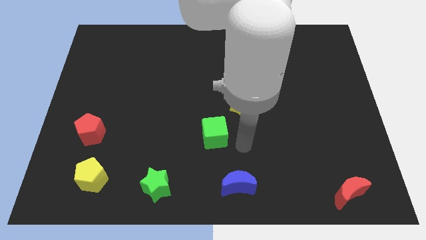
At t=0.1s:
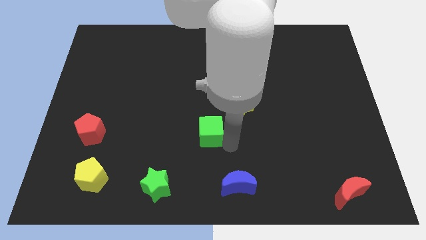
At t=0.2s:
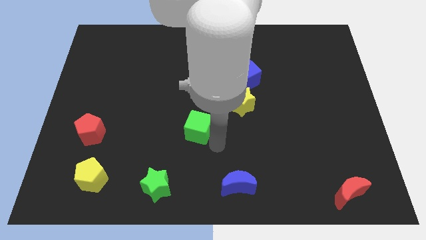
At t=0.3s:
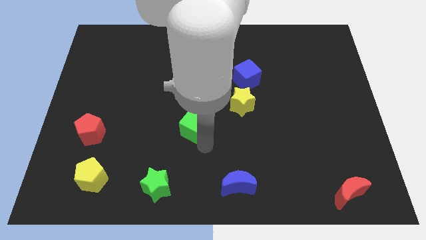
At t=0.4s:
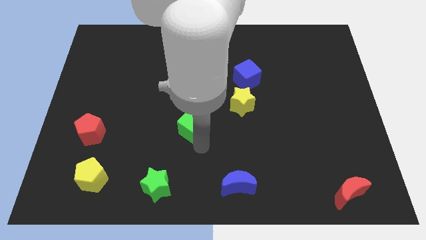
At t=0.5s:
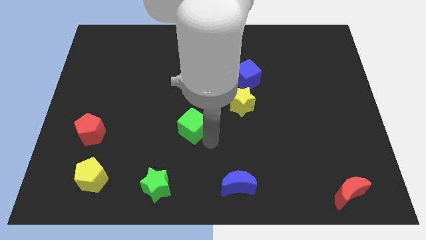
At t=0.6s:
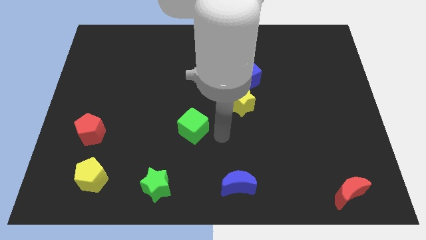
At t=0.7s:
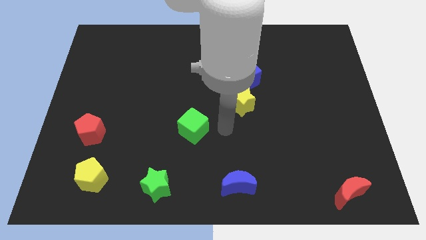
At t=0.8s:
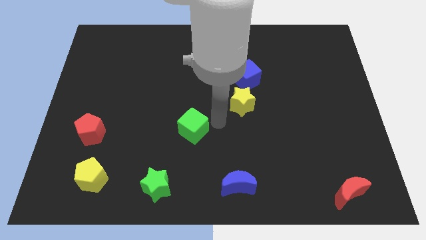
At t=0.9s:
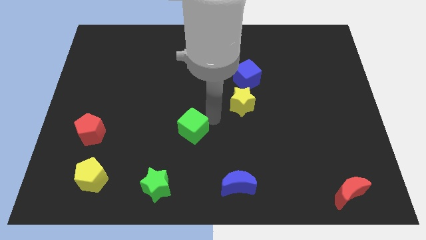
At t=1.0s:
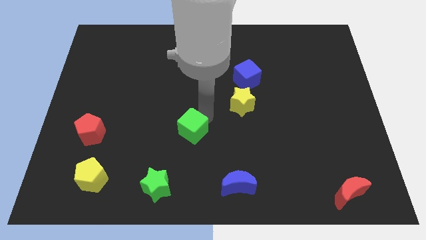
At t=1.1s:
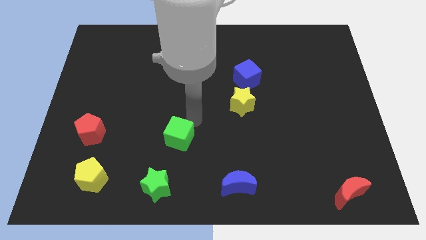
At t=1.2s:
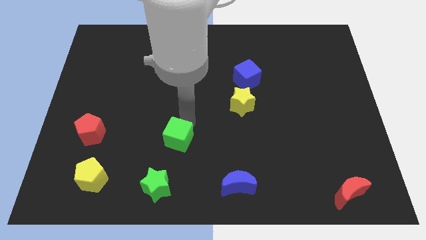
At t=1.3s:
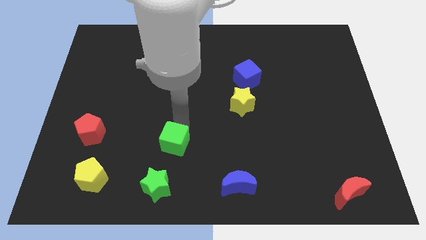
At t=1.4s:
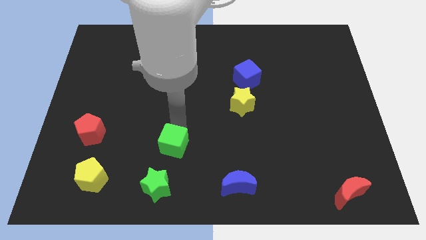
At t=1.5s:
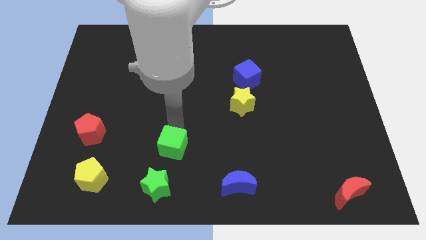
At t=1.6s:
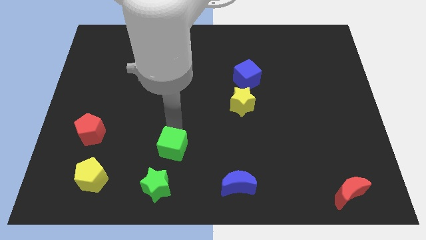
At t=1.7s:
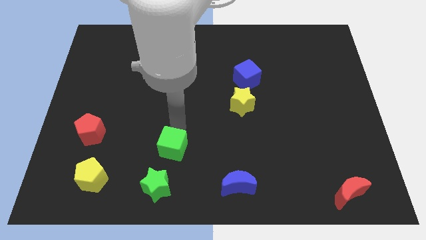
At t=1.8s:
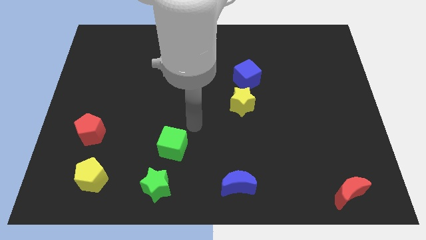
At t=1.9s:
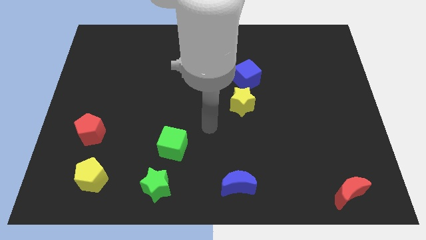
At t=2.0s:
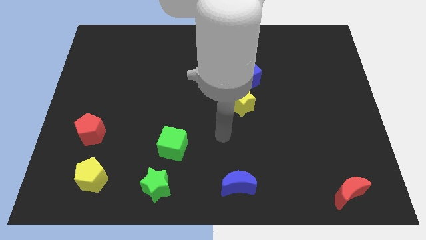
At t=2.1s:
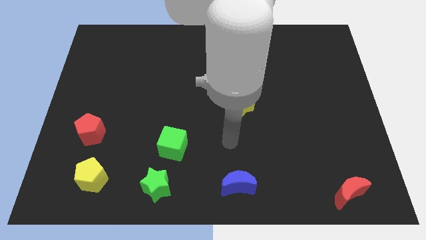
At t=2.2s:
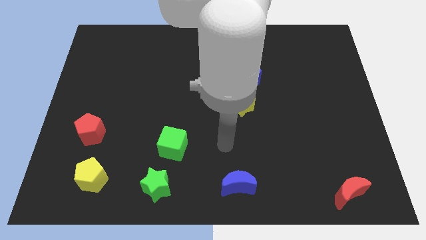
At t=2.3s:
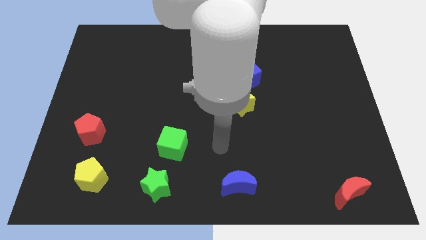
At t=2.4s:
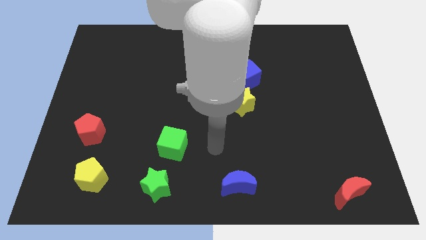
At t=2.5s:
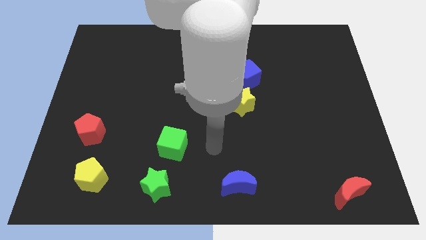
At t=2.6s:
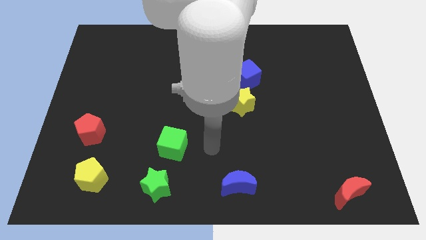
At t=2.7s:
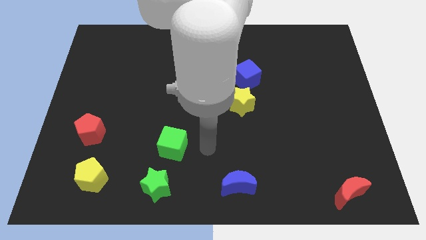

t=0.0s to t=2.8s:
move the green cube at the right side of the red pentagon

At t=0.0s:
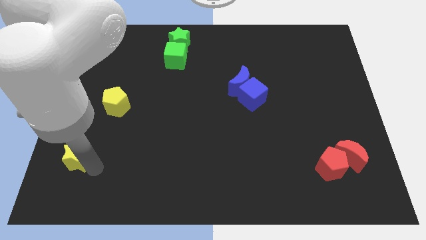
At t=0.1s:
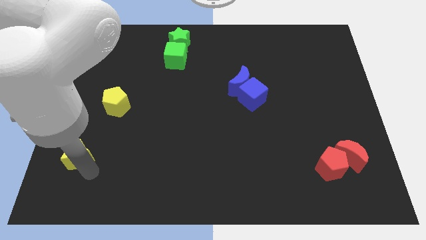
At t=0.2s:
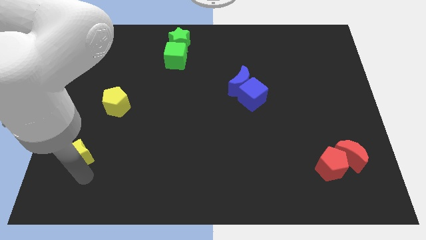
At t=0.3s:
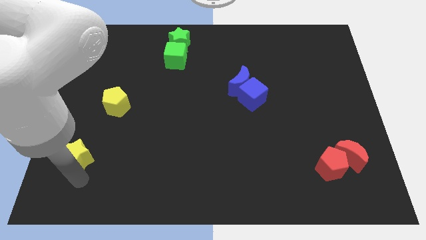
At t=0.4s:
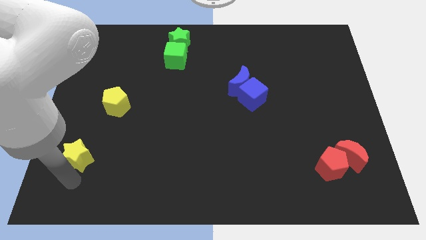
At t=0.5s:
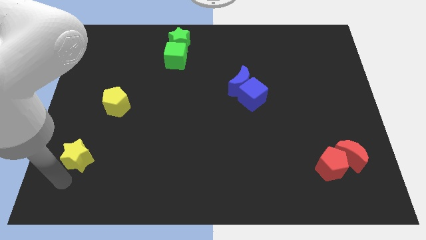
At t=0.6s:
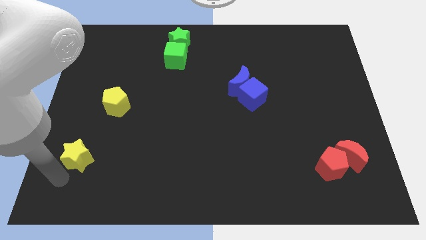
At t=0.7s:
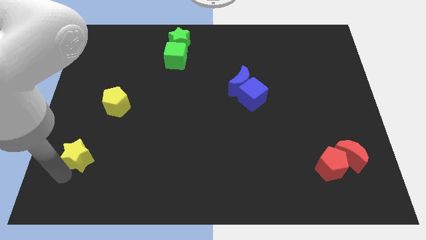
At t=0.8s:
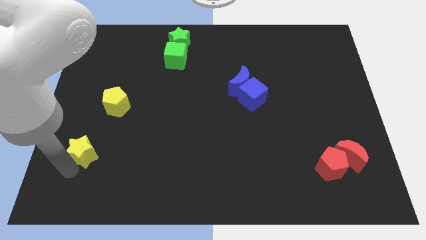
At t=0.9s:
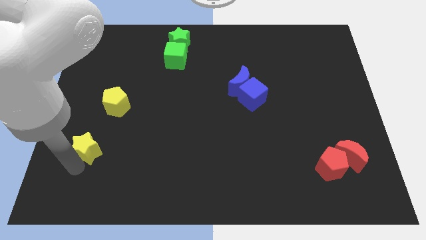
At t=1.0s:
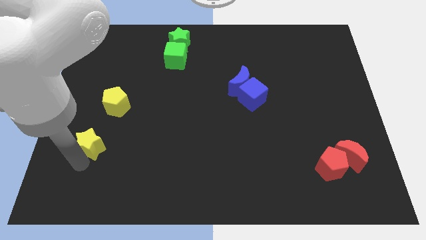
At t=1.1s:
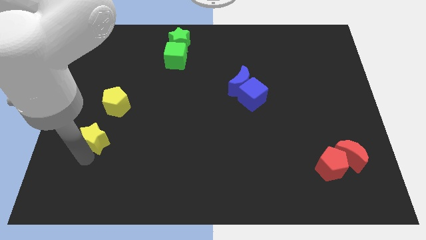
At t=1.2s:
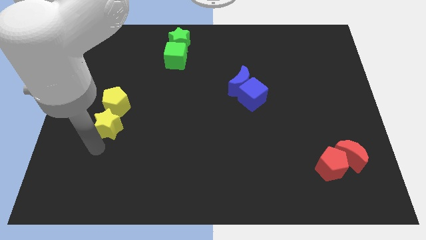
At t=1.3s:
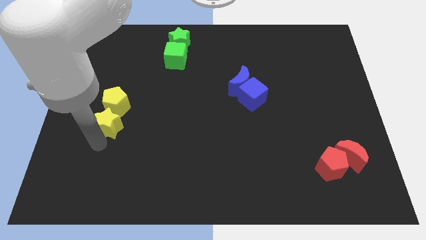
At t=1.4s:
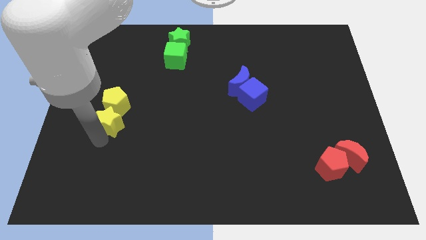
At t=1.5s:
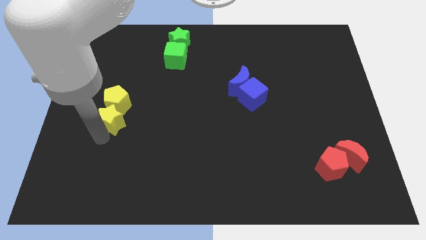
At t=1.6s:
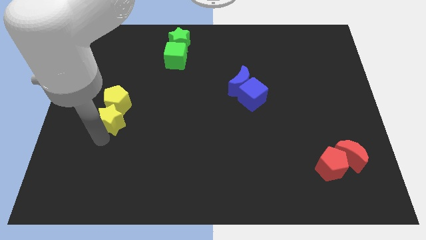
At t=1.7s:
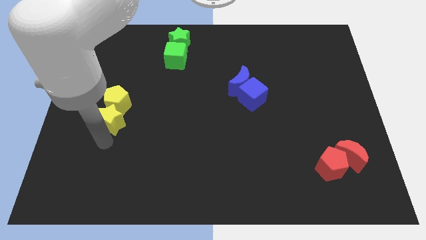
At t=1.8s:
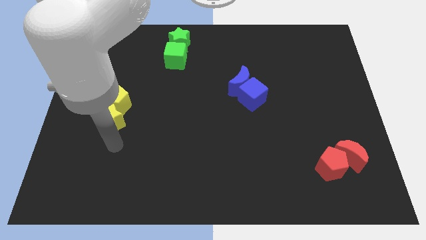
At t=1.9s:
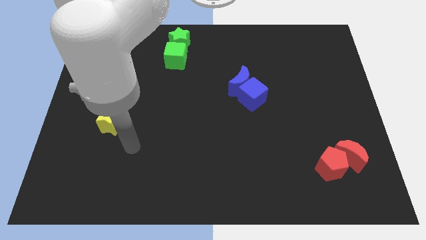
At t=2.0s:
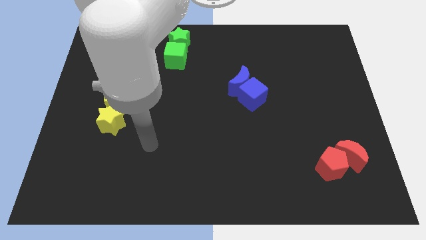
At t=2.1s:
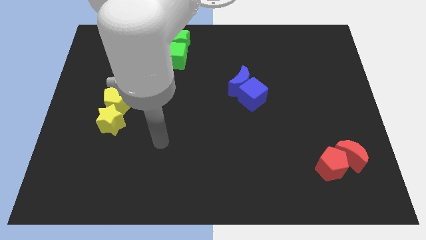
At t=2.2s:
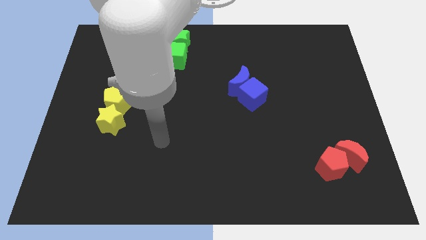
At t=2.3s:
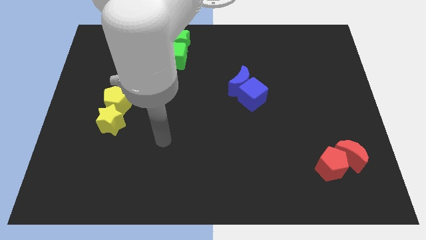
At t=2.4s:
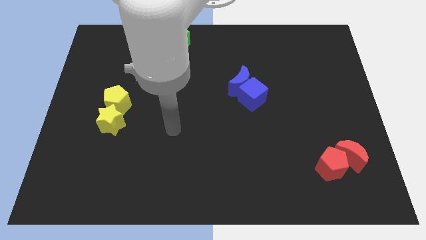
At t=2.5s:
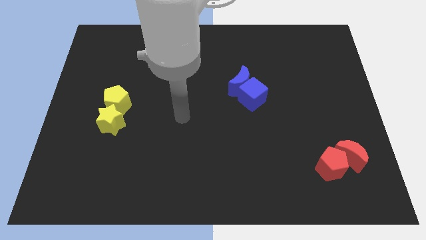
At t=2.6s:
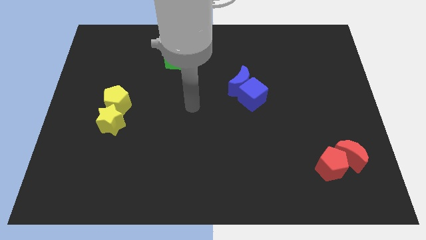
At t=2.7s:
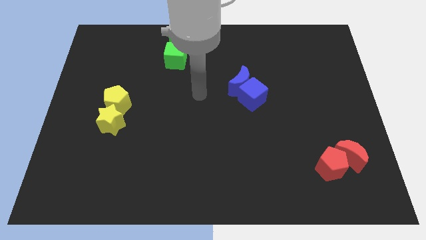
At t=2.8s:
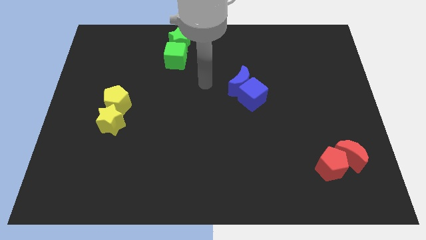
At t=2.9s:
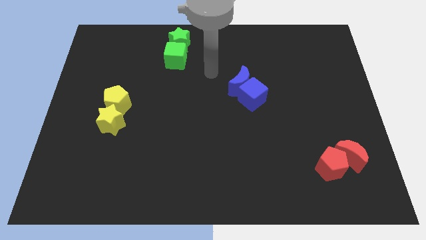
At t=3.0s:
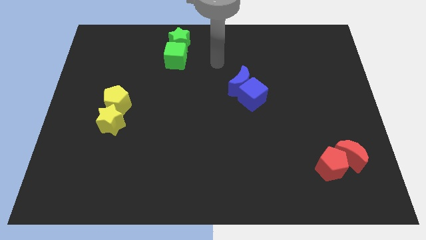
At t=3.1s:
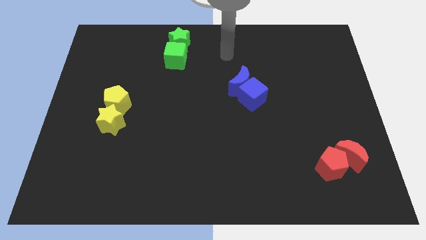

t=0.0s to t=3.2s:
move the yellow pentagon and the yellow star together

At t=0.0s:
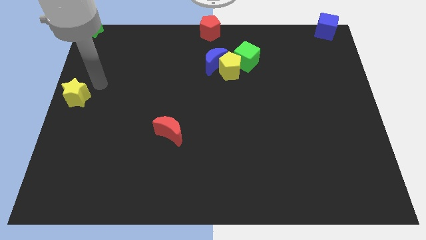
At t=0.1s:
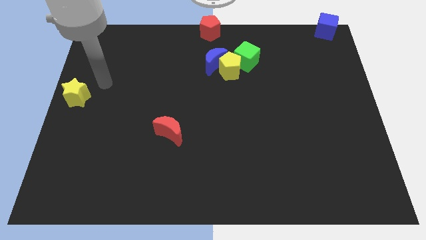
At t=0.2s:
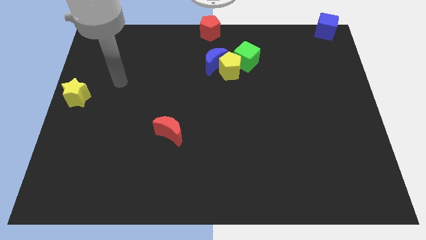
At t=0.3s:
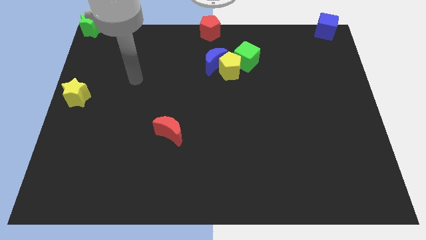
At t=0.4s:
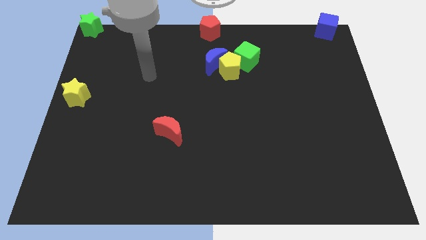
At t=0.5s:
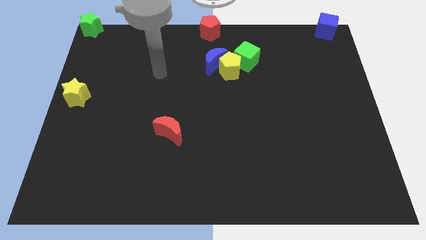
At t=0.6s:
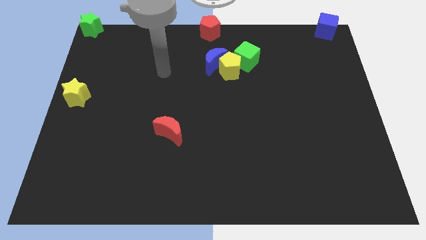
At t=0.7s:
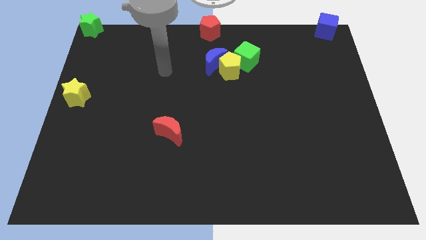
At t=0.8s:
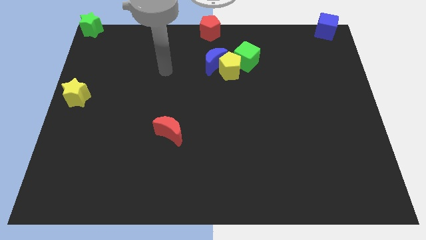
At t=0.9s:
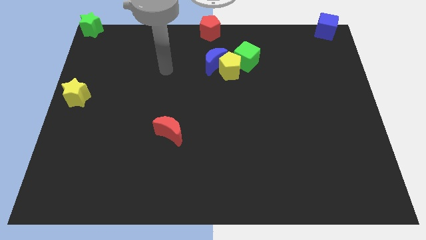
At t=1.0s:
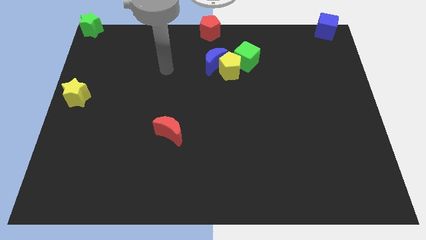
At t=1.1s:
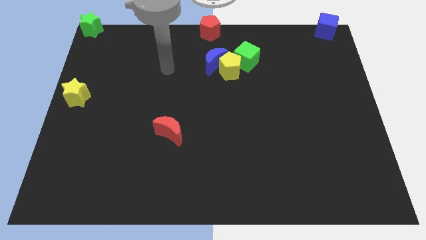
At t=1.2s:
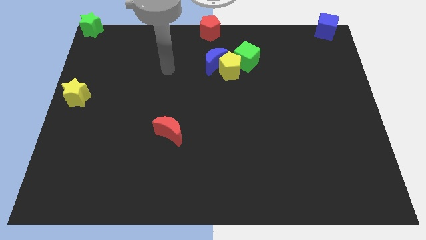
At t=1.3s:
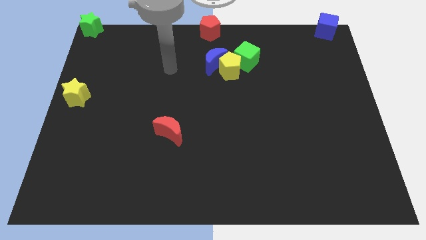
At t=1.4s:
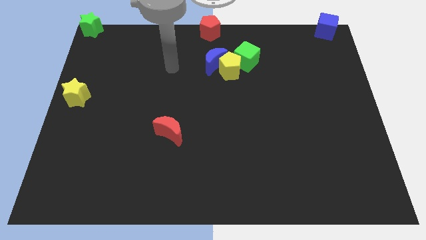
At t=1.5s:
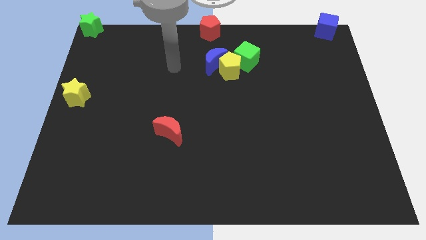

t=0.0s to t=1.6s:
place your arm at the left of the blue crescent

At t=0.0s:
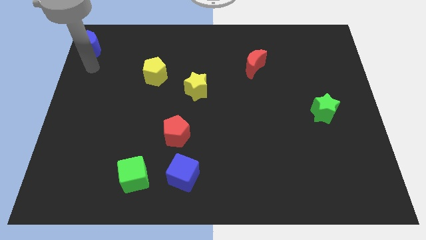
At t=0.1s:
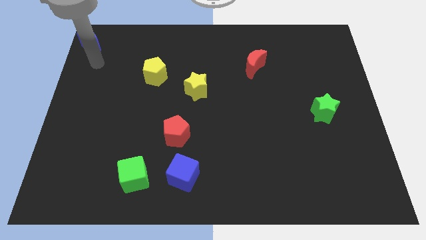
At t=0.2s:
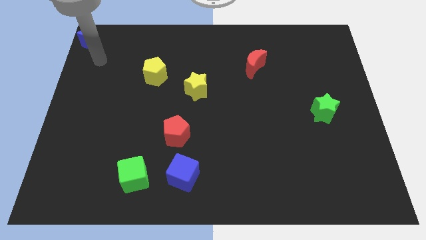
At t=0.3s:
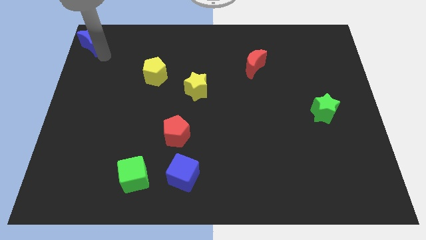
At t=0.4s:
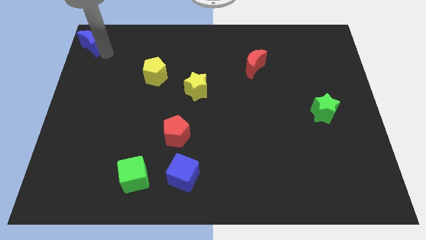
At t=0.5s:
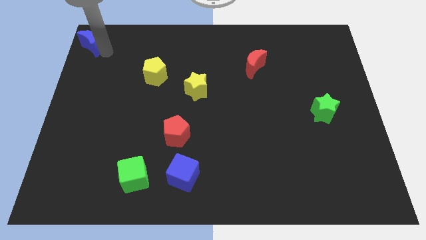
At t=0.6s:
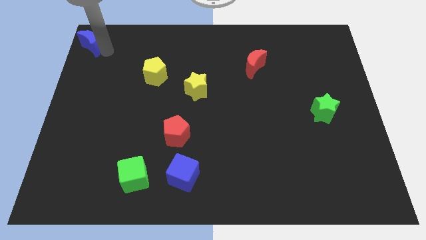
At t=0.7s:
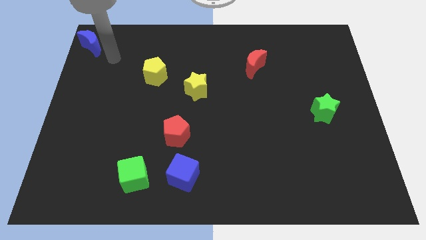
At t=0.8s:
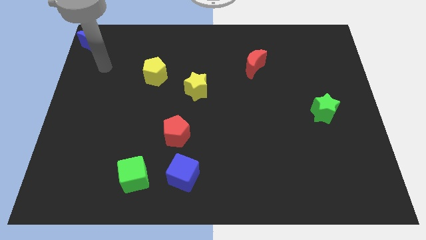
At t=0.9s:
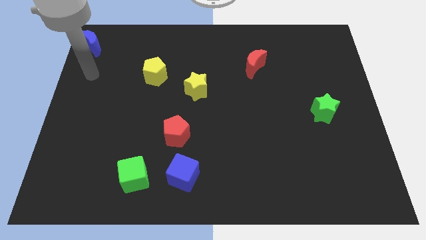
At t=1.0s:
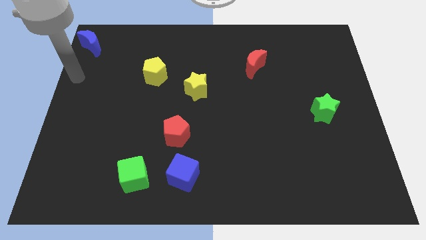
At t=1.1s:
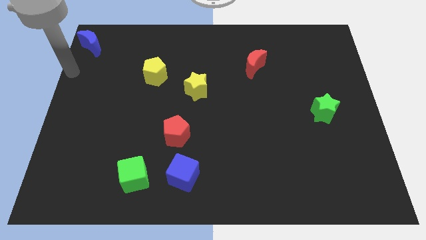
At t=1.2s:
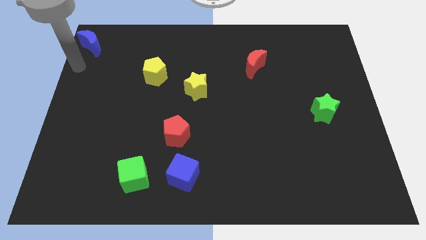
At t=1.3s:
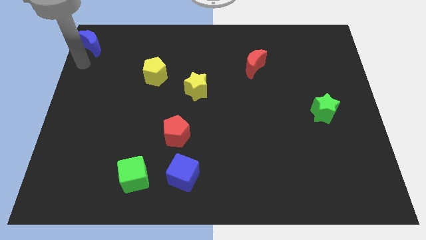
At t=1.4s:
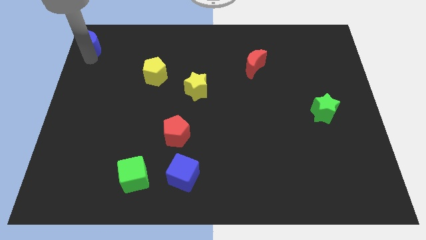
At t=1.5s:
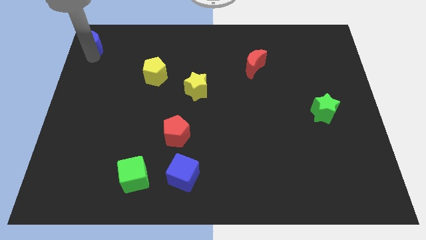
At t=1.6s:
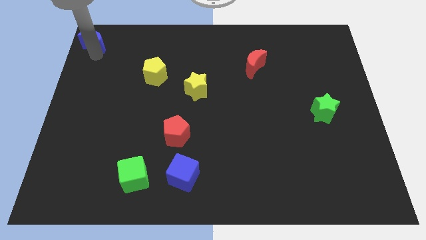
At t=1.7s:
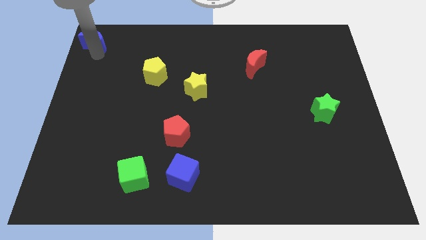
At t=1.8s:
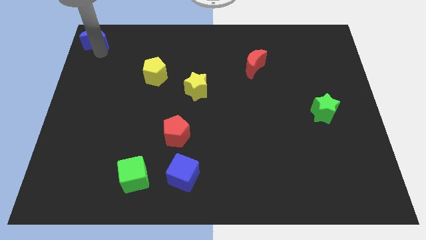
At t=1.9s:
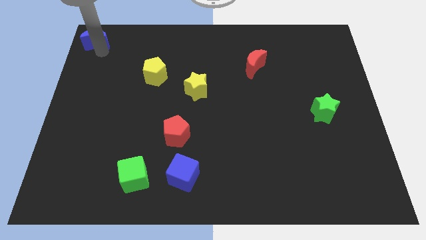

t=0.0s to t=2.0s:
slightly turn the blue moon
